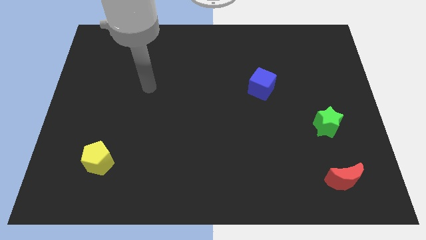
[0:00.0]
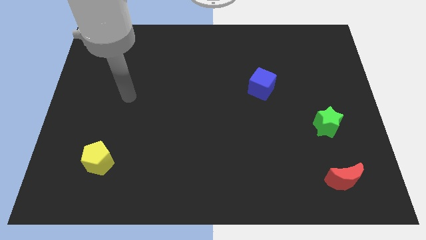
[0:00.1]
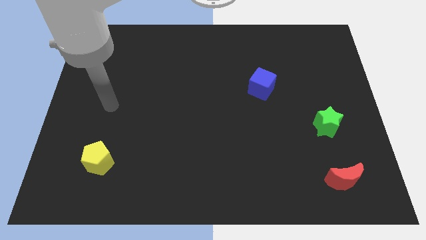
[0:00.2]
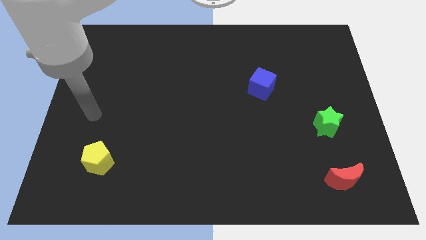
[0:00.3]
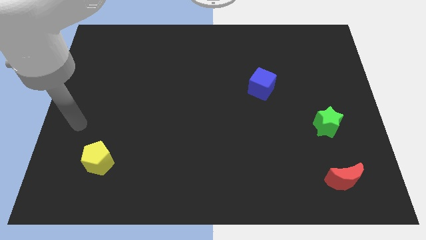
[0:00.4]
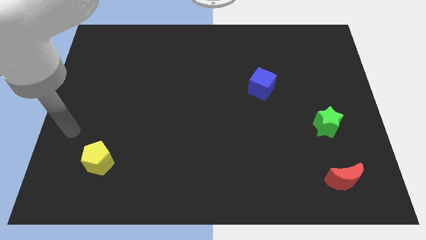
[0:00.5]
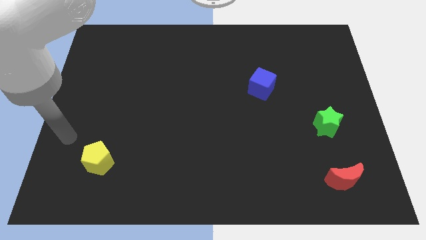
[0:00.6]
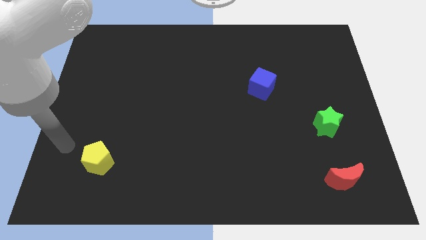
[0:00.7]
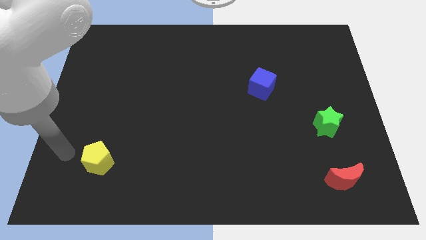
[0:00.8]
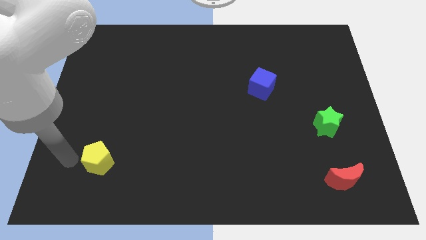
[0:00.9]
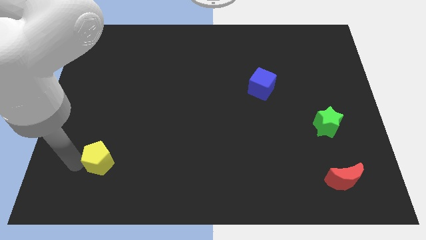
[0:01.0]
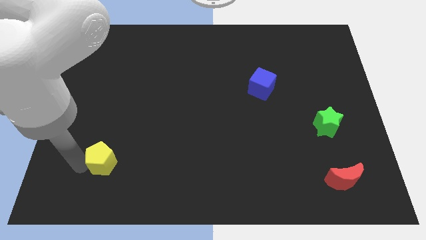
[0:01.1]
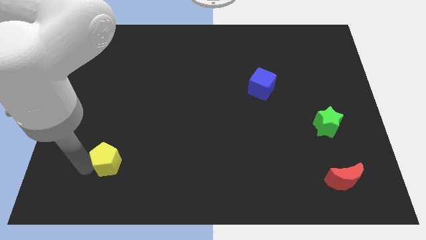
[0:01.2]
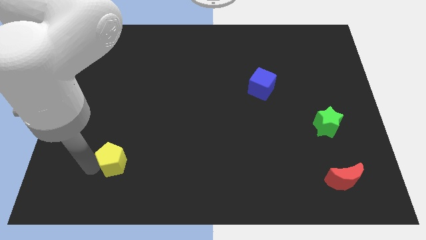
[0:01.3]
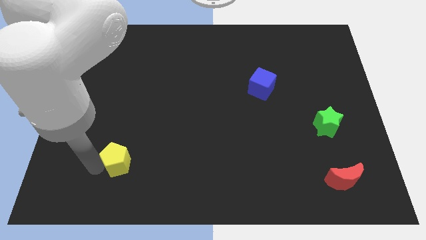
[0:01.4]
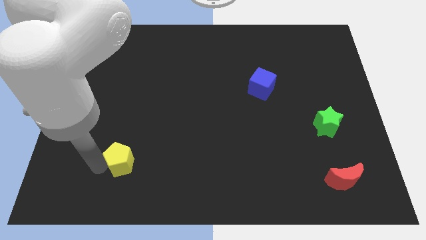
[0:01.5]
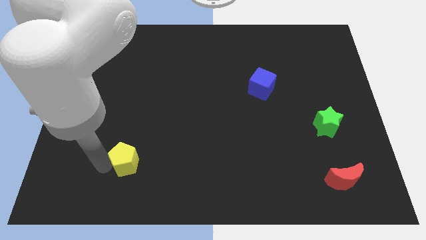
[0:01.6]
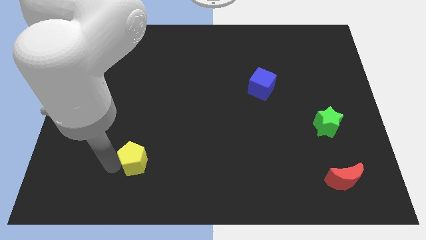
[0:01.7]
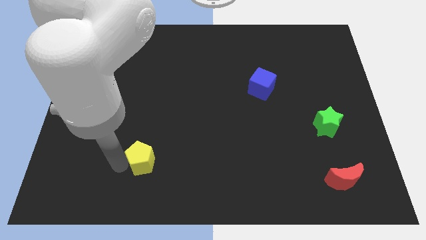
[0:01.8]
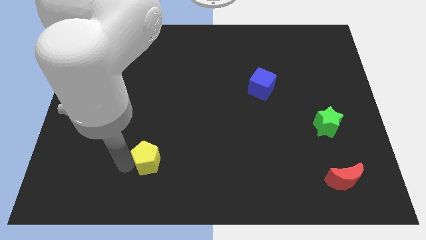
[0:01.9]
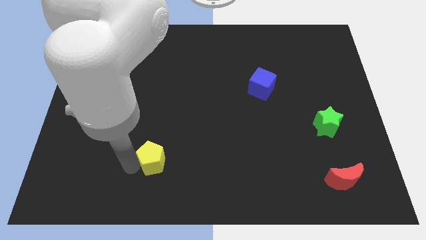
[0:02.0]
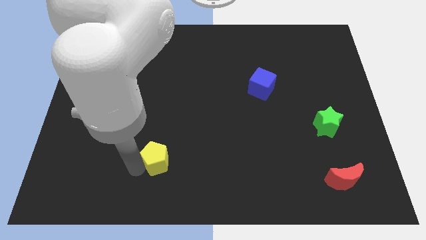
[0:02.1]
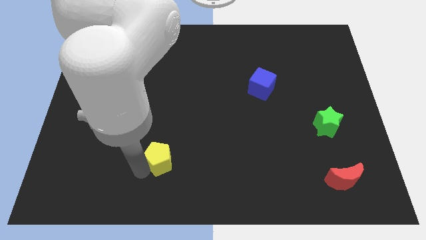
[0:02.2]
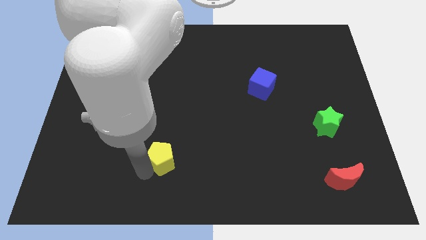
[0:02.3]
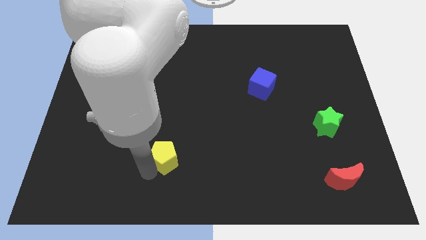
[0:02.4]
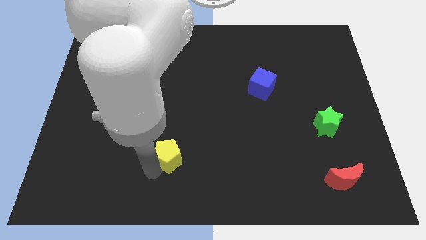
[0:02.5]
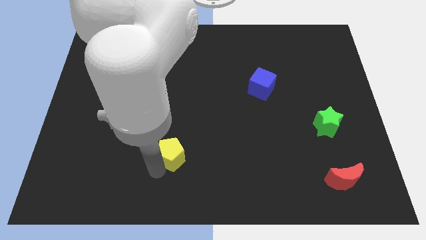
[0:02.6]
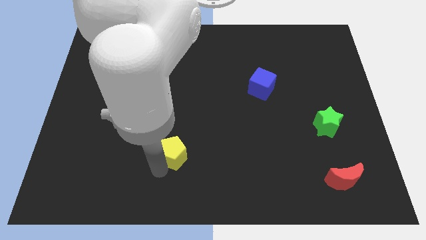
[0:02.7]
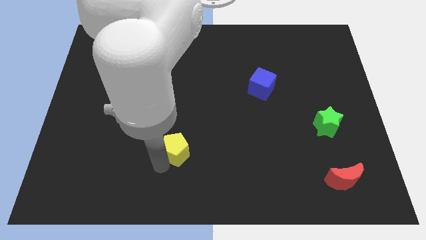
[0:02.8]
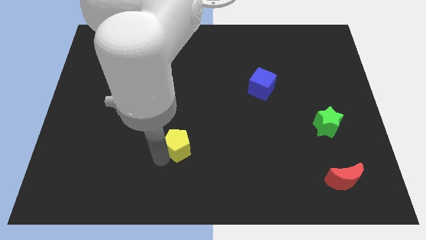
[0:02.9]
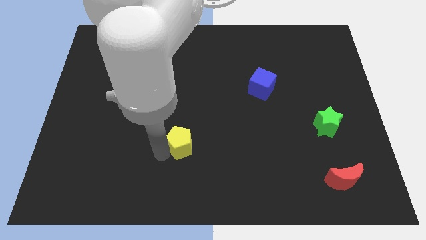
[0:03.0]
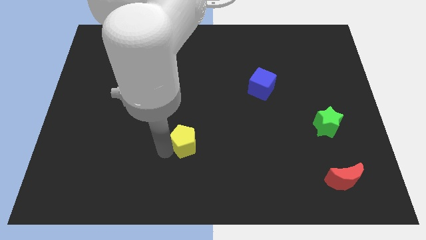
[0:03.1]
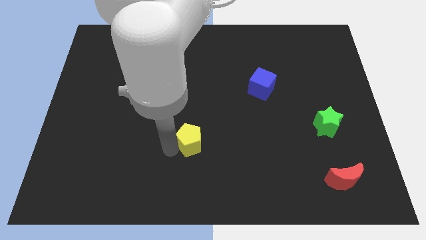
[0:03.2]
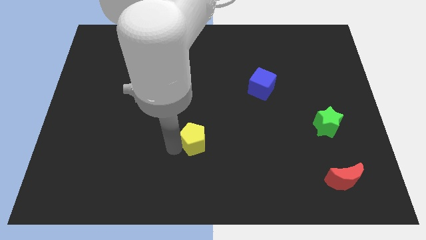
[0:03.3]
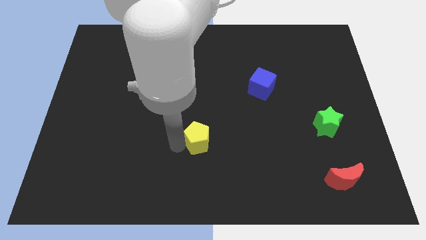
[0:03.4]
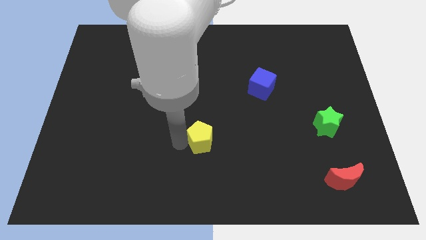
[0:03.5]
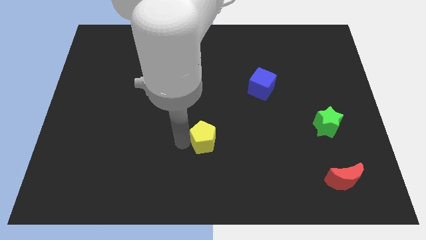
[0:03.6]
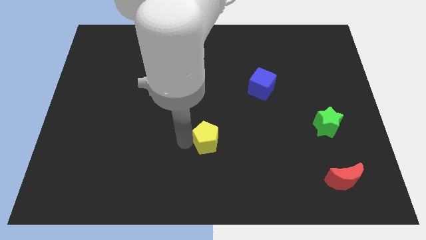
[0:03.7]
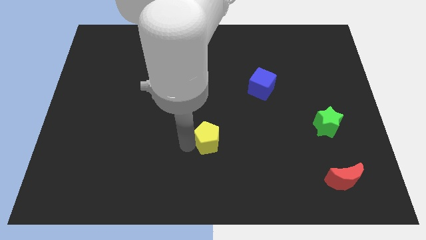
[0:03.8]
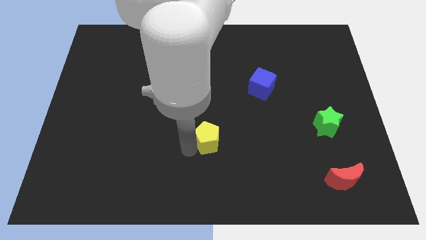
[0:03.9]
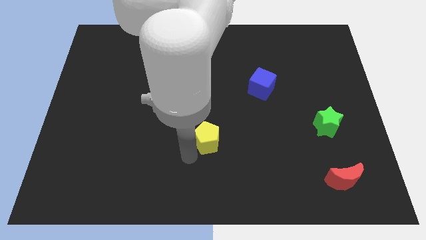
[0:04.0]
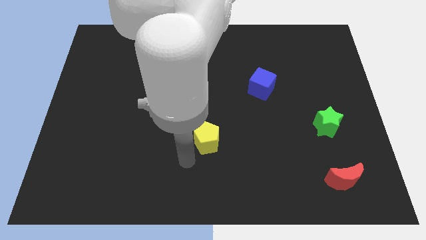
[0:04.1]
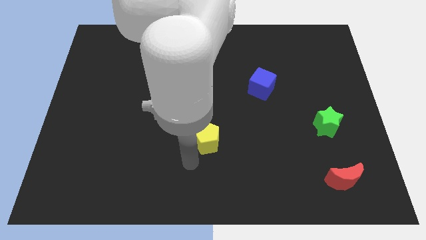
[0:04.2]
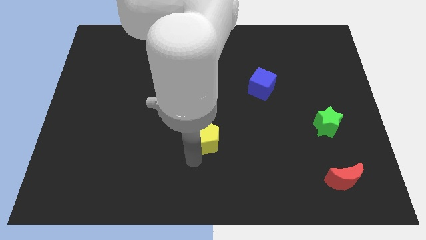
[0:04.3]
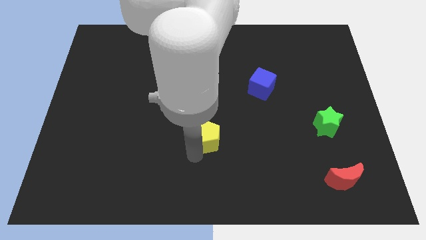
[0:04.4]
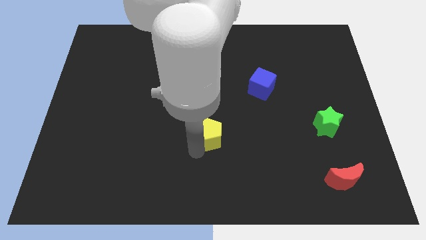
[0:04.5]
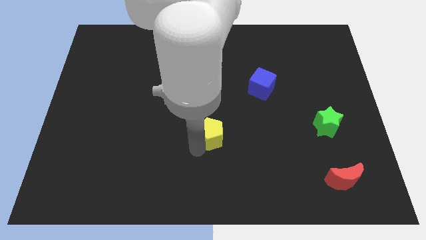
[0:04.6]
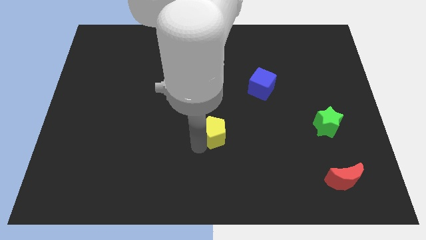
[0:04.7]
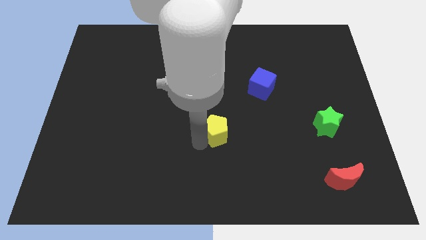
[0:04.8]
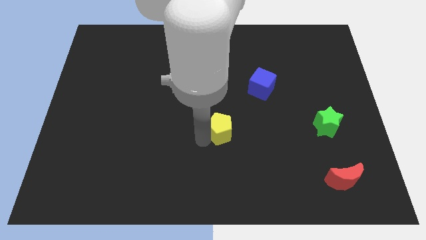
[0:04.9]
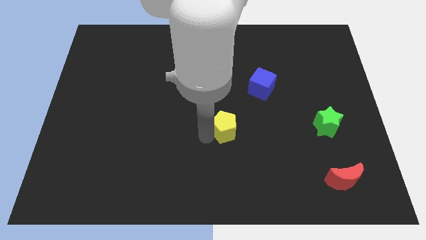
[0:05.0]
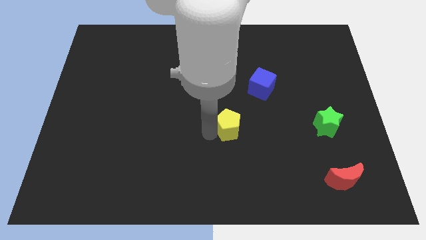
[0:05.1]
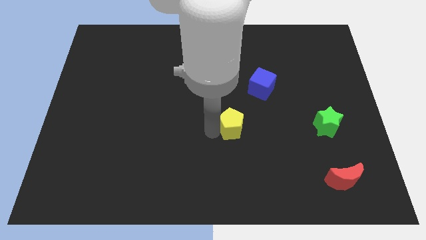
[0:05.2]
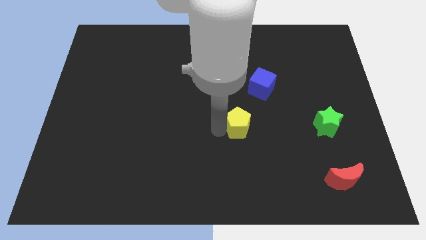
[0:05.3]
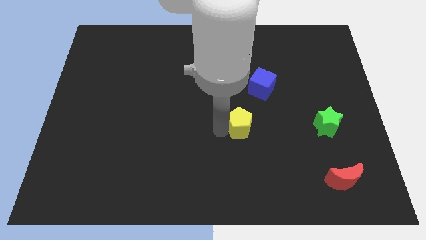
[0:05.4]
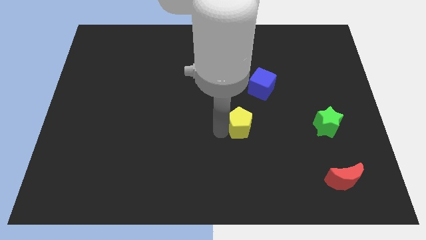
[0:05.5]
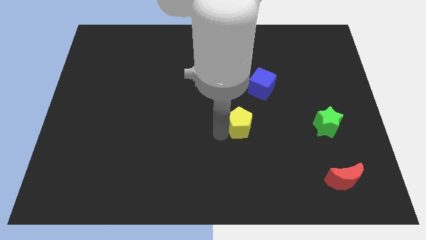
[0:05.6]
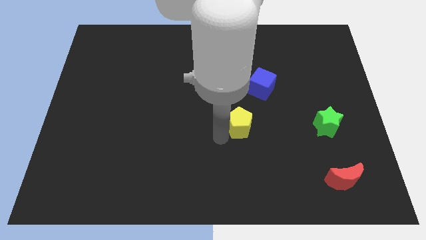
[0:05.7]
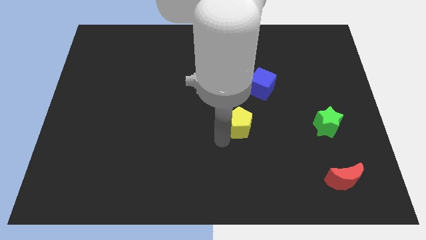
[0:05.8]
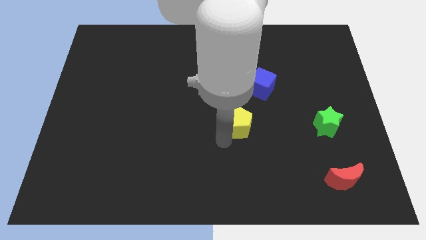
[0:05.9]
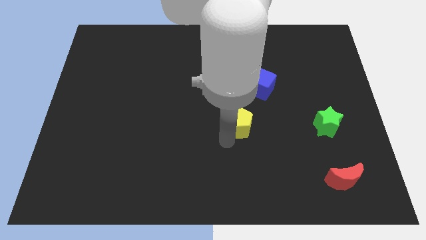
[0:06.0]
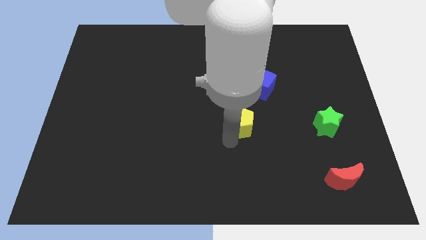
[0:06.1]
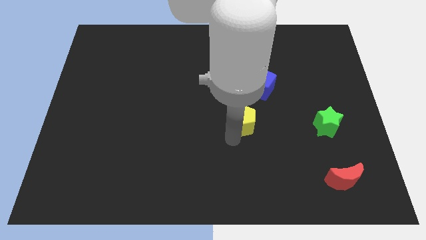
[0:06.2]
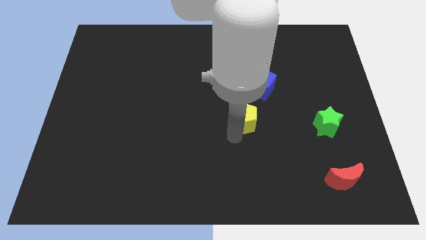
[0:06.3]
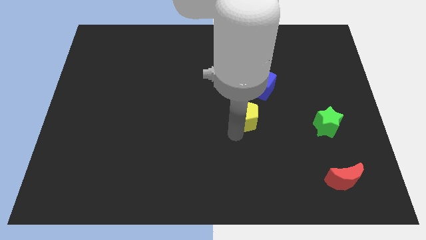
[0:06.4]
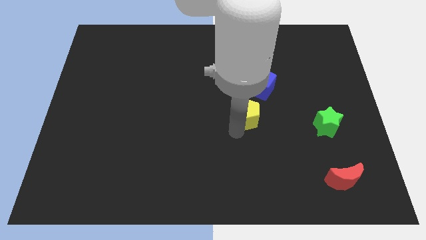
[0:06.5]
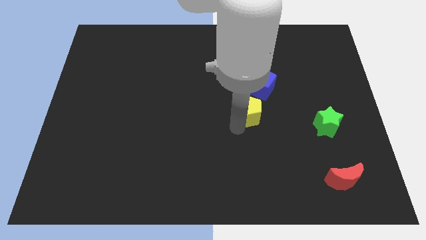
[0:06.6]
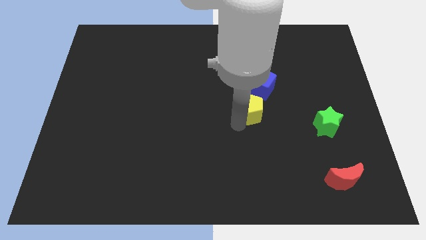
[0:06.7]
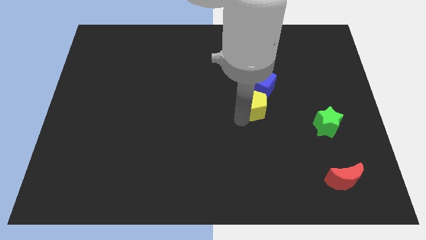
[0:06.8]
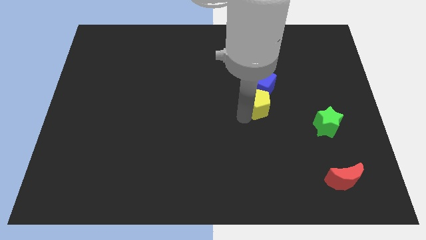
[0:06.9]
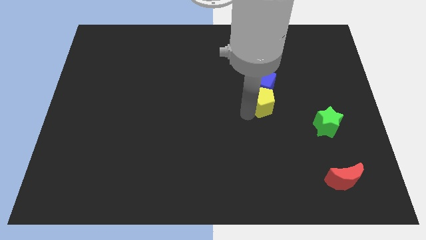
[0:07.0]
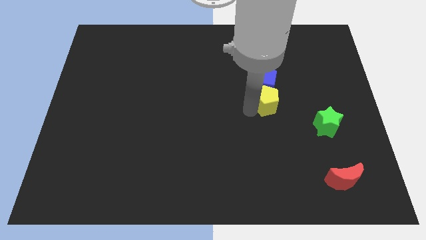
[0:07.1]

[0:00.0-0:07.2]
push the yellow block close to the blue cube

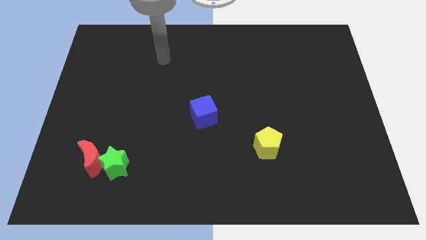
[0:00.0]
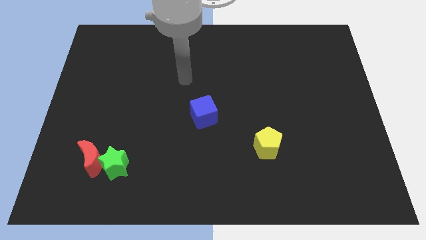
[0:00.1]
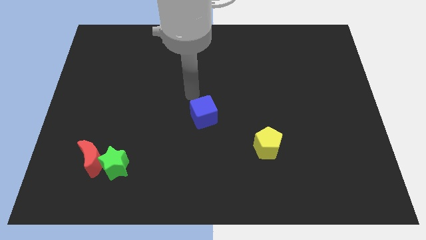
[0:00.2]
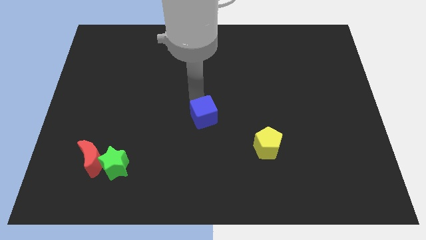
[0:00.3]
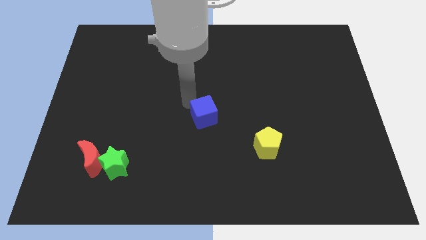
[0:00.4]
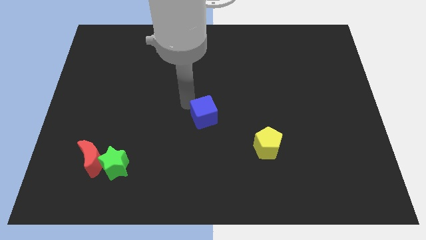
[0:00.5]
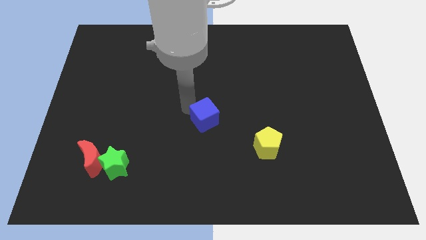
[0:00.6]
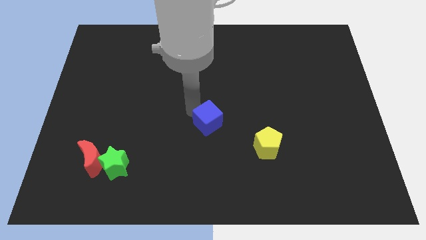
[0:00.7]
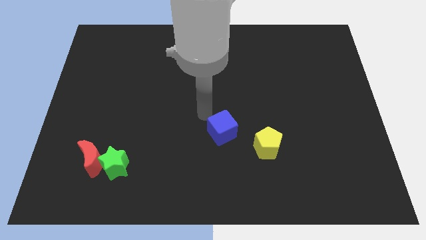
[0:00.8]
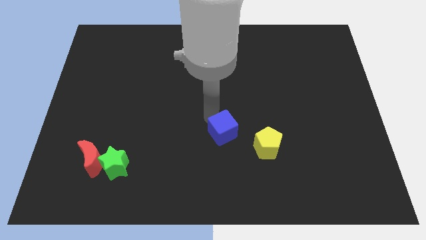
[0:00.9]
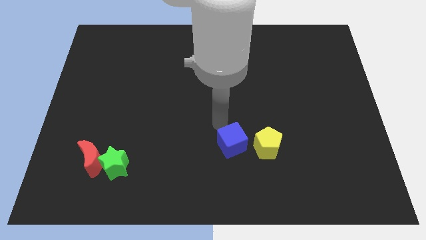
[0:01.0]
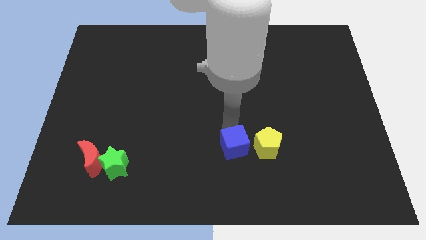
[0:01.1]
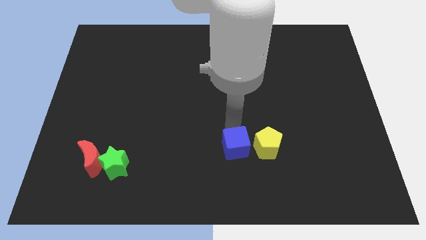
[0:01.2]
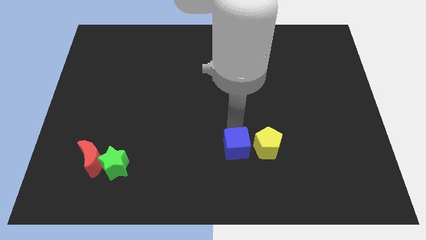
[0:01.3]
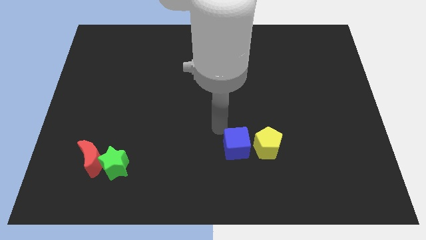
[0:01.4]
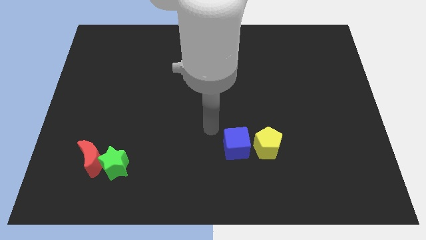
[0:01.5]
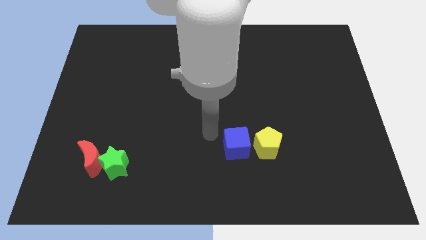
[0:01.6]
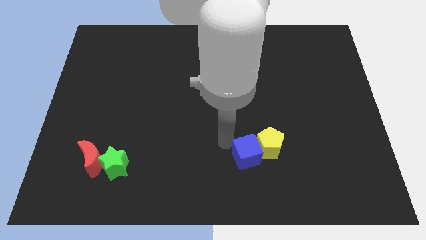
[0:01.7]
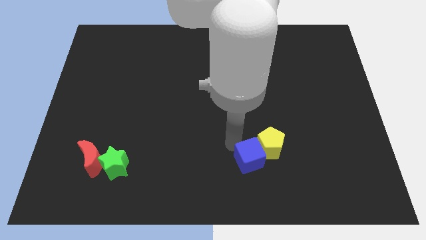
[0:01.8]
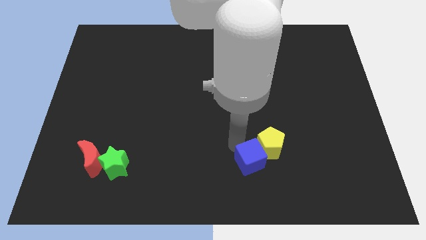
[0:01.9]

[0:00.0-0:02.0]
push the blue cube towards the pentagon
